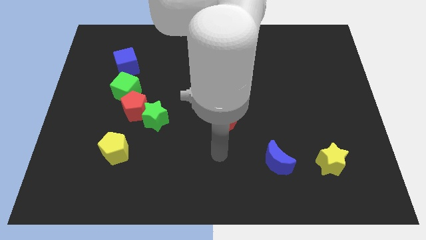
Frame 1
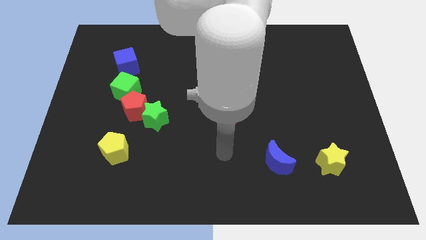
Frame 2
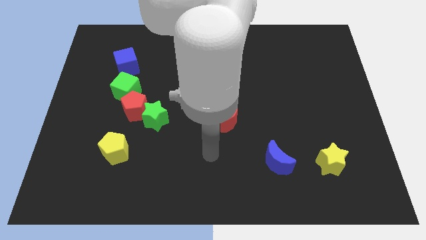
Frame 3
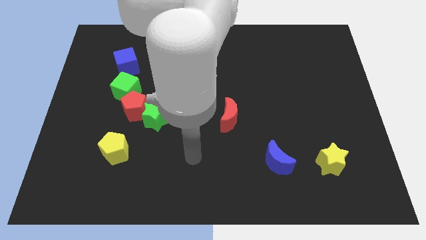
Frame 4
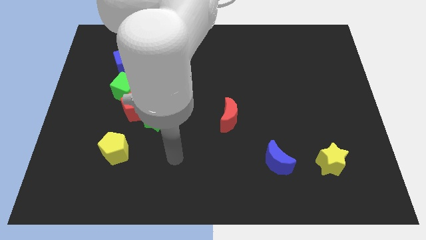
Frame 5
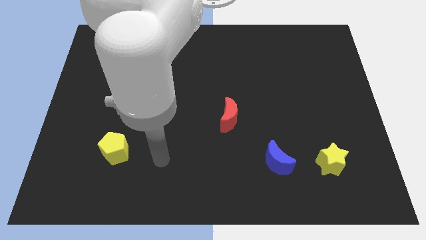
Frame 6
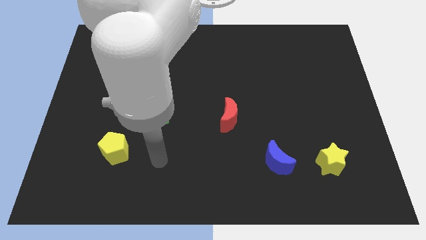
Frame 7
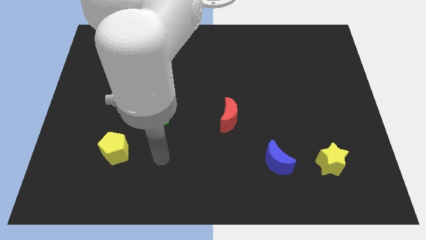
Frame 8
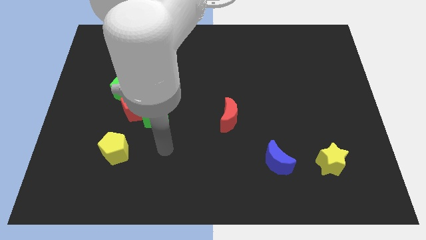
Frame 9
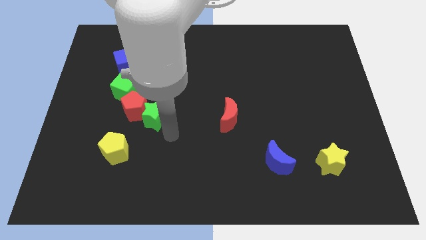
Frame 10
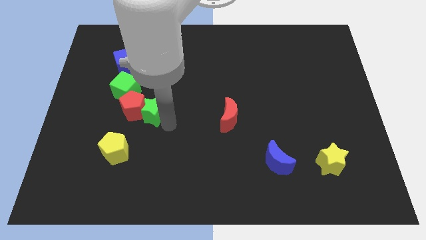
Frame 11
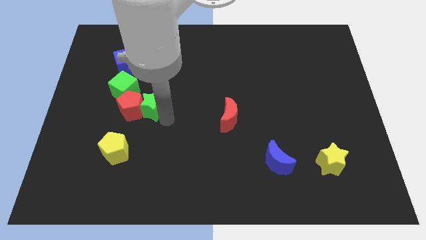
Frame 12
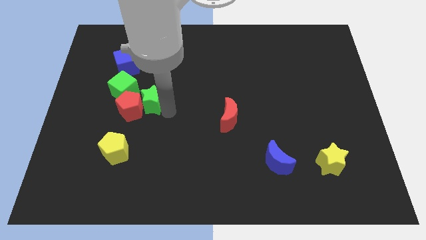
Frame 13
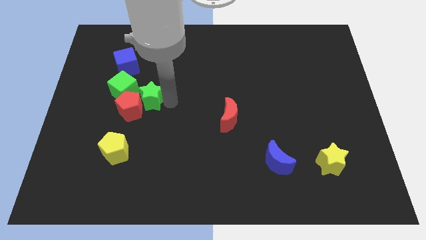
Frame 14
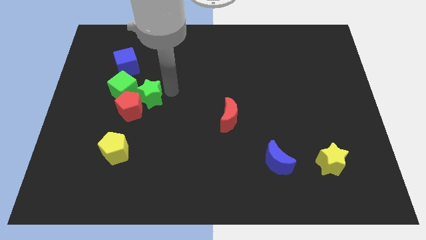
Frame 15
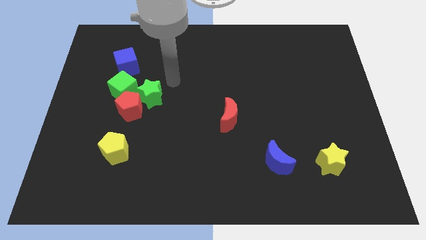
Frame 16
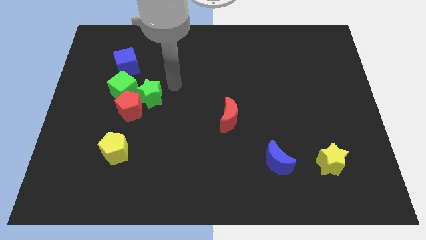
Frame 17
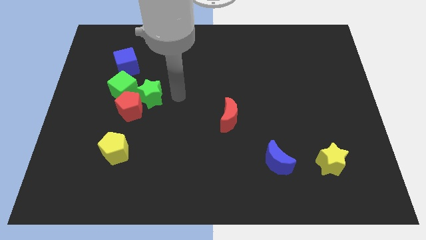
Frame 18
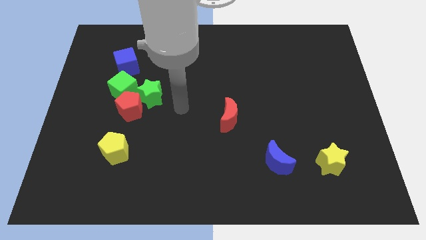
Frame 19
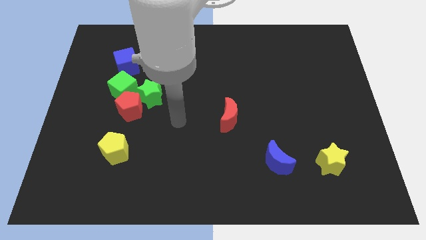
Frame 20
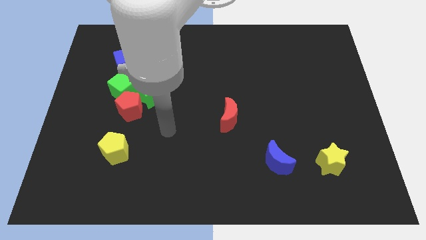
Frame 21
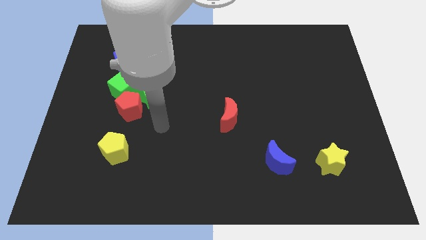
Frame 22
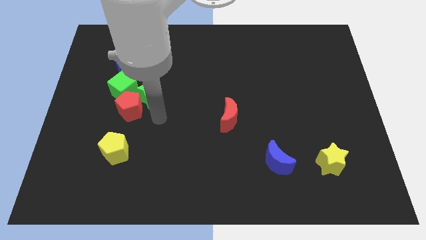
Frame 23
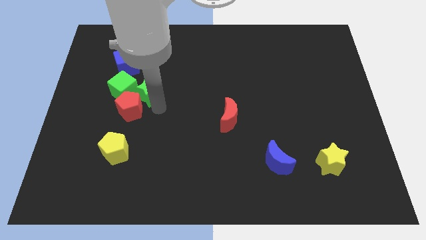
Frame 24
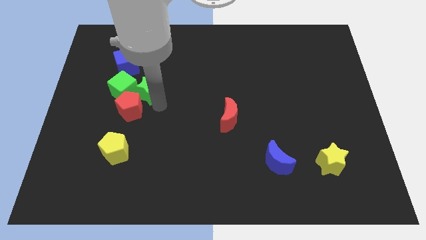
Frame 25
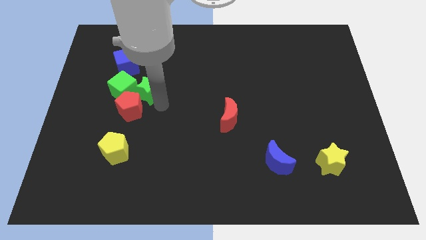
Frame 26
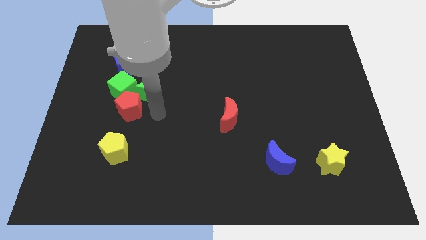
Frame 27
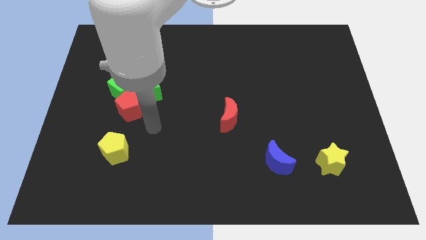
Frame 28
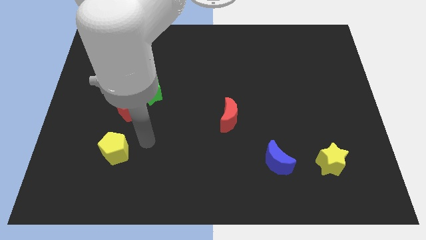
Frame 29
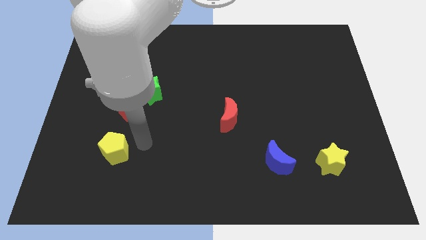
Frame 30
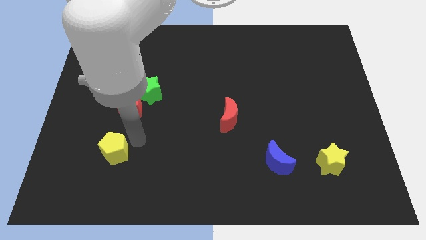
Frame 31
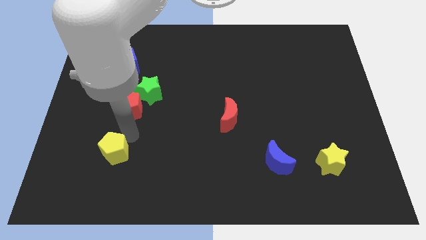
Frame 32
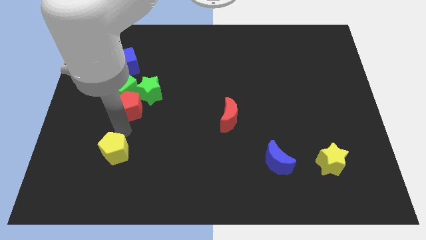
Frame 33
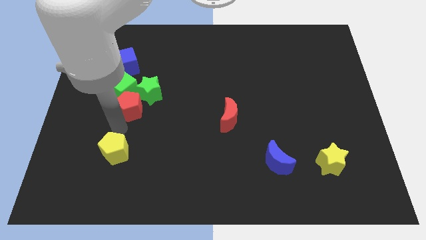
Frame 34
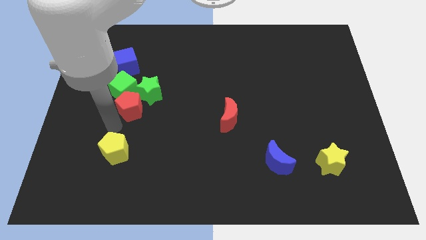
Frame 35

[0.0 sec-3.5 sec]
place arm in between red and yellow pentagons

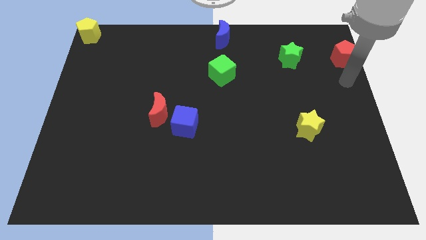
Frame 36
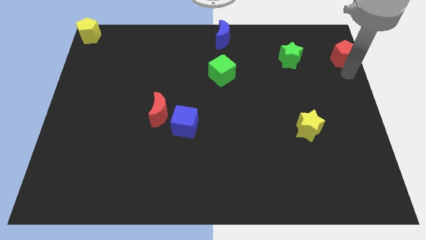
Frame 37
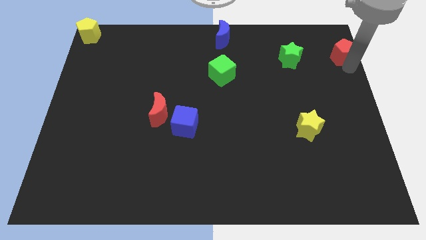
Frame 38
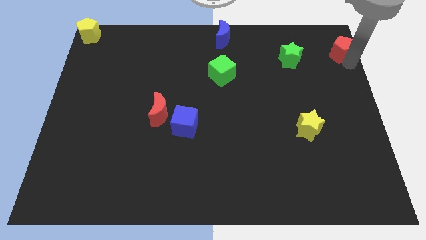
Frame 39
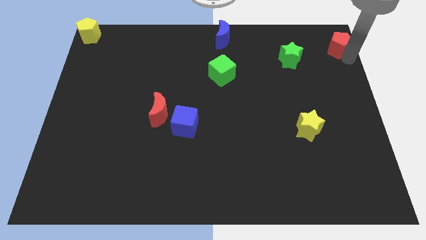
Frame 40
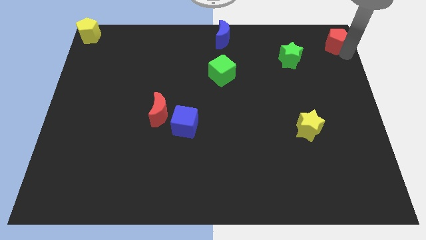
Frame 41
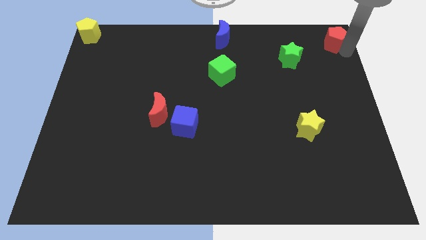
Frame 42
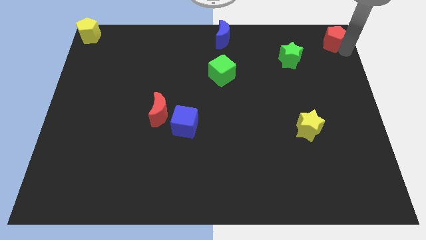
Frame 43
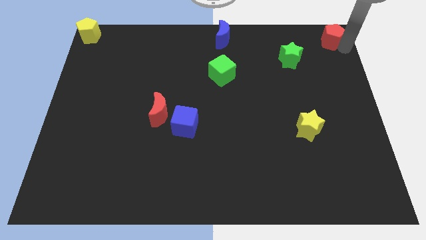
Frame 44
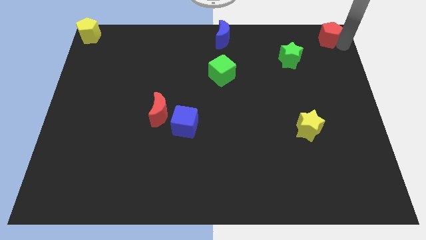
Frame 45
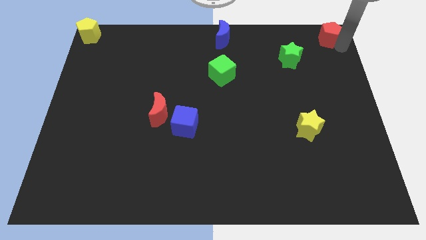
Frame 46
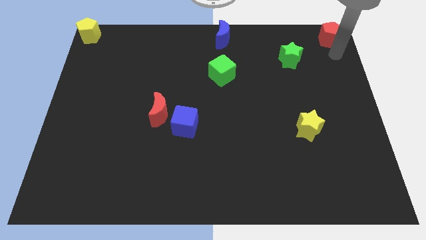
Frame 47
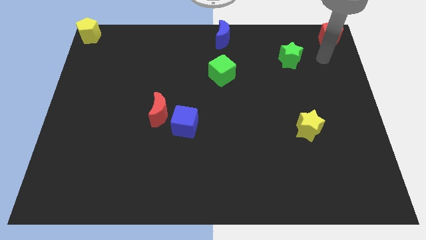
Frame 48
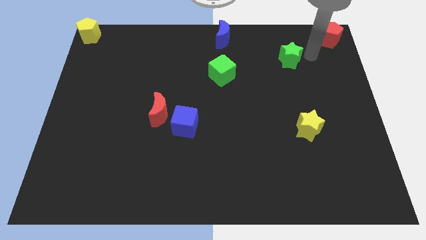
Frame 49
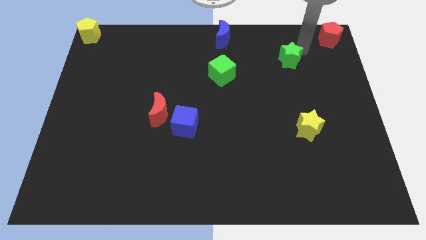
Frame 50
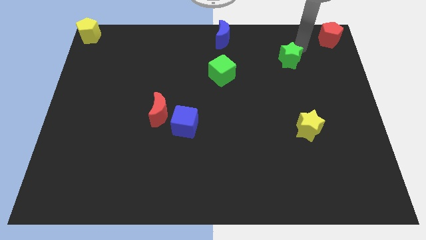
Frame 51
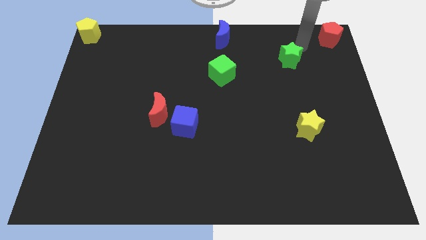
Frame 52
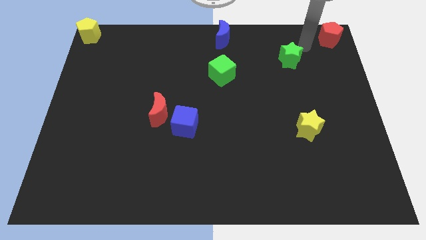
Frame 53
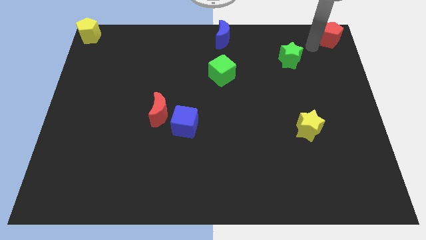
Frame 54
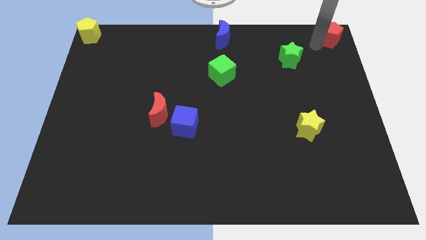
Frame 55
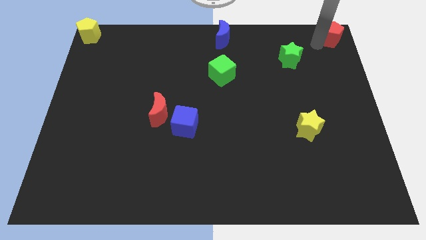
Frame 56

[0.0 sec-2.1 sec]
push the red pentagon to the top right corner of the board

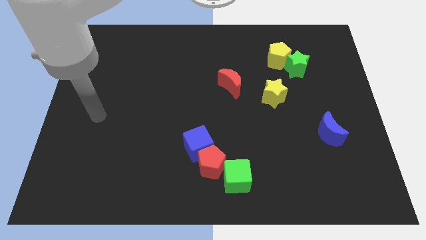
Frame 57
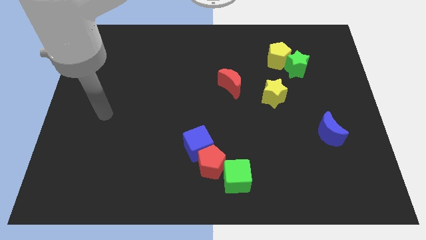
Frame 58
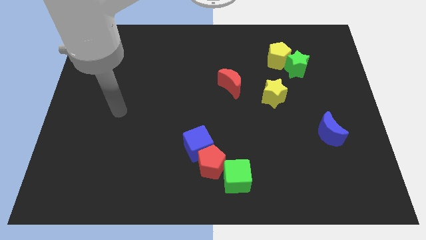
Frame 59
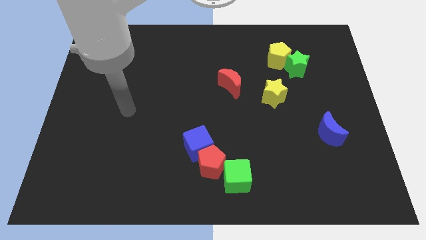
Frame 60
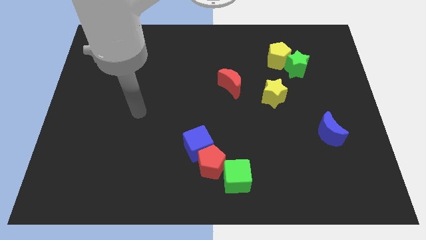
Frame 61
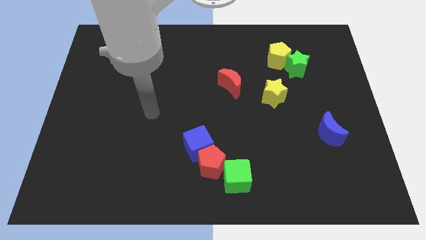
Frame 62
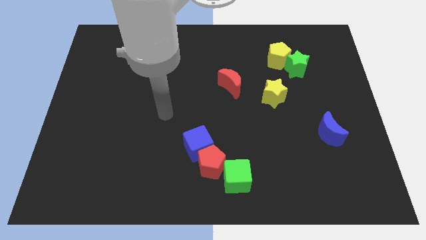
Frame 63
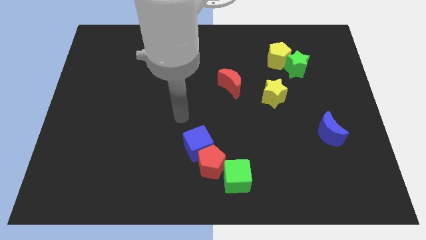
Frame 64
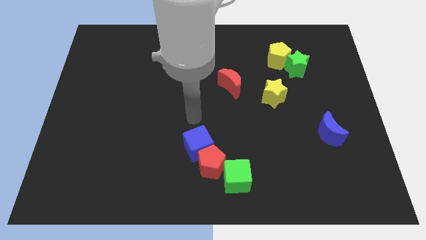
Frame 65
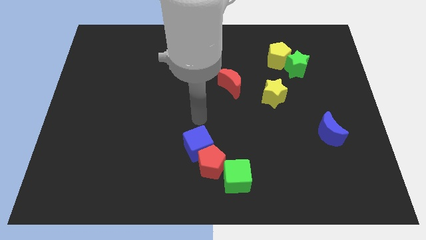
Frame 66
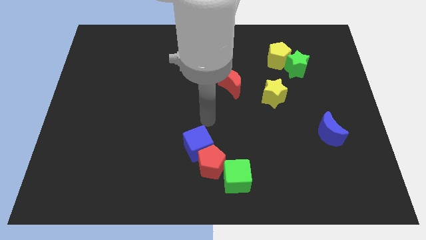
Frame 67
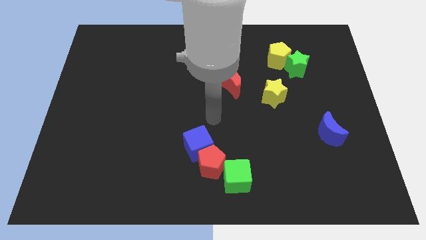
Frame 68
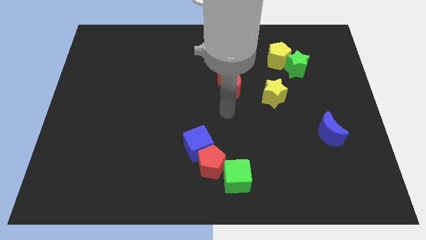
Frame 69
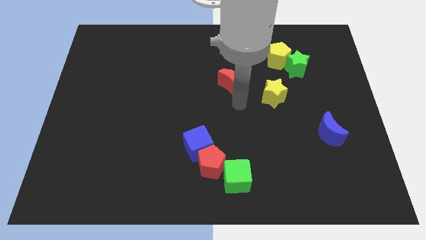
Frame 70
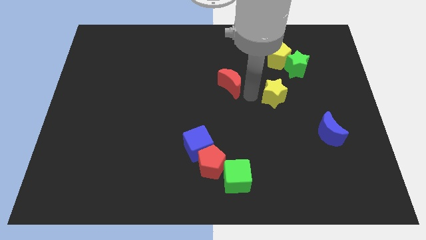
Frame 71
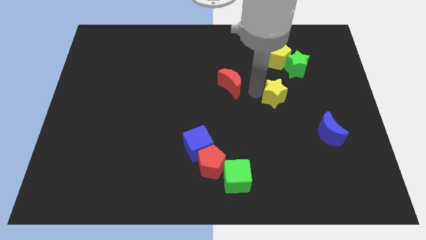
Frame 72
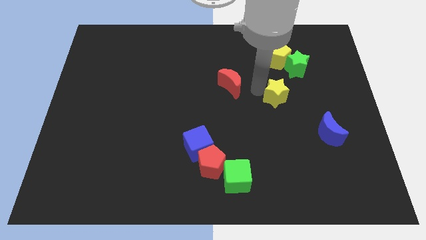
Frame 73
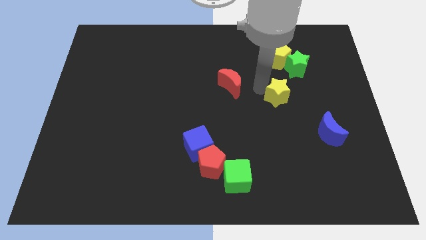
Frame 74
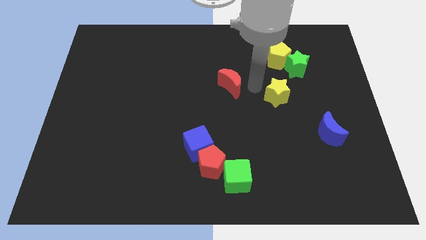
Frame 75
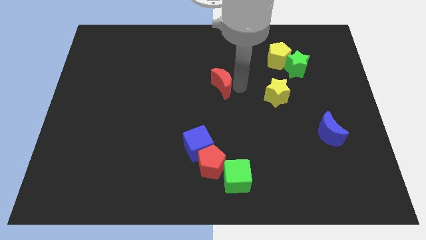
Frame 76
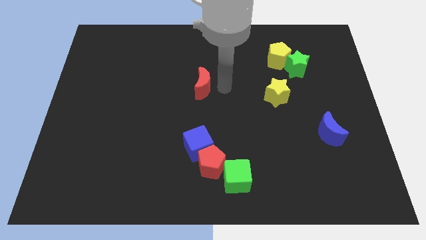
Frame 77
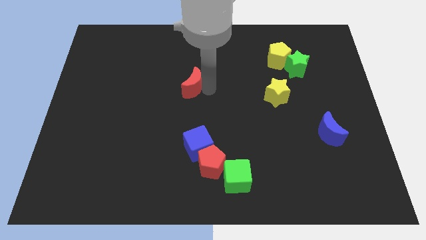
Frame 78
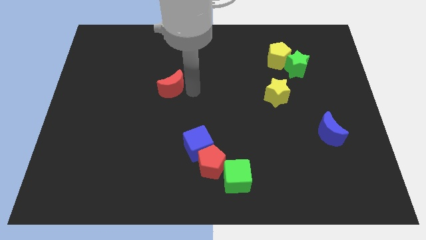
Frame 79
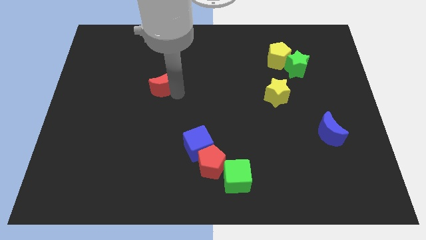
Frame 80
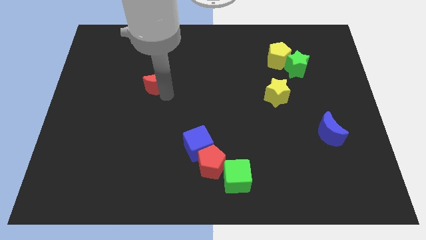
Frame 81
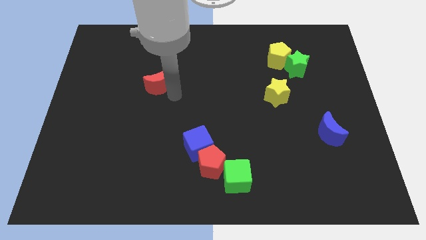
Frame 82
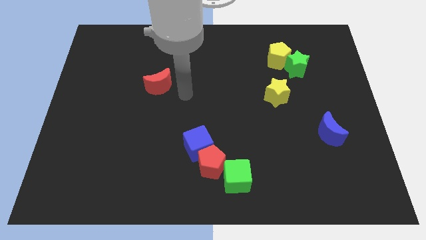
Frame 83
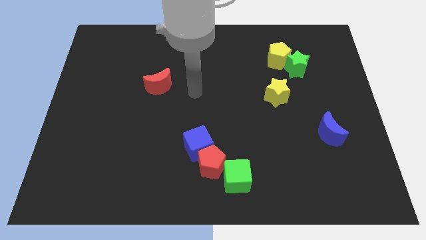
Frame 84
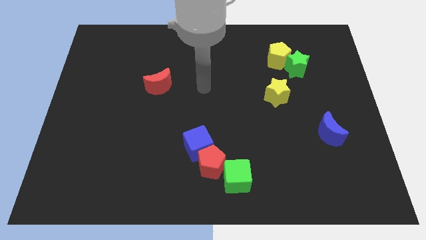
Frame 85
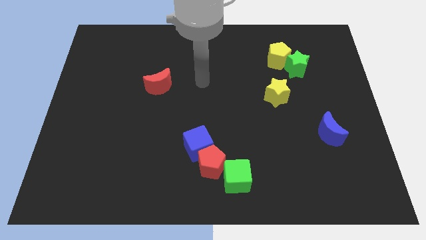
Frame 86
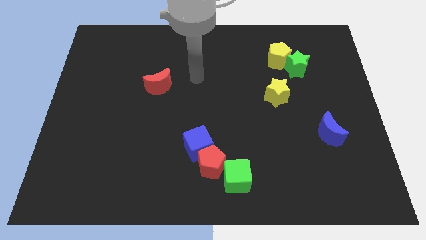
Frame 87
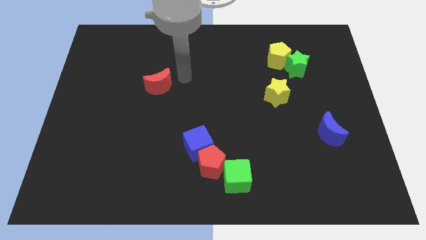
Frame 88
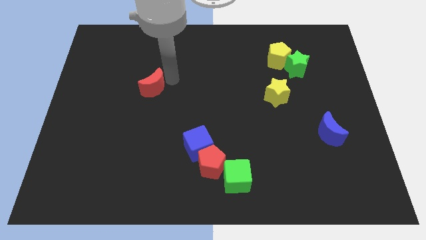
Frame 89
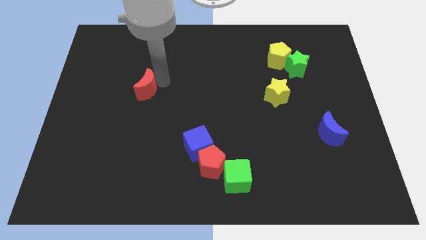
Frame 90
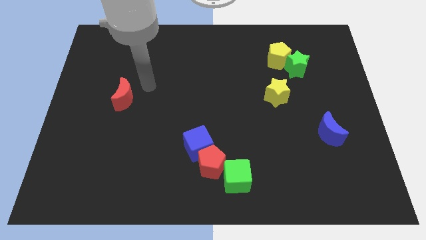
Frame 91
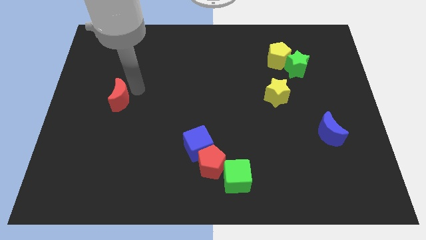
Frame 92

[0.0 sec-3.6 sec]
move the red crescent to the top left of the blue cube
